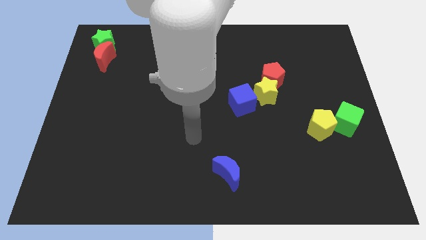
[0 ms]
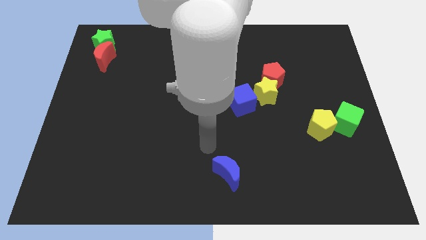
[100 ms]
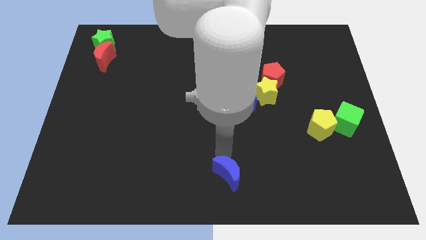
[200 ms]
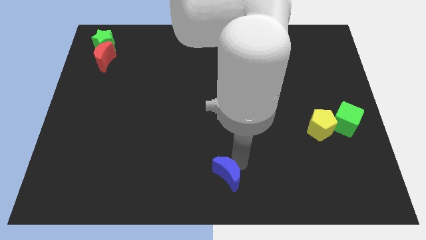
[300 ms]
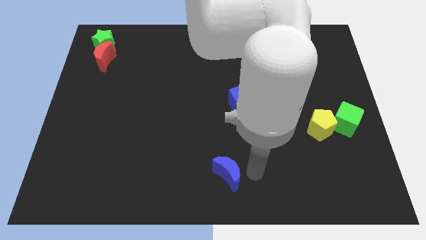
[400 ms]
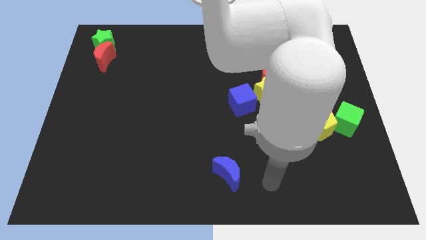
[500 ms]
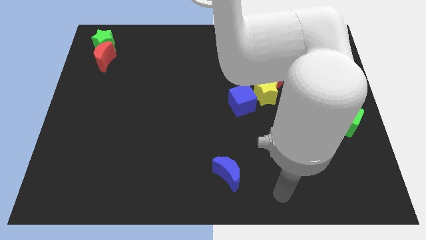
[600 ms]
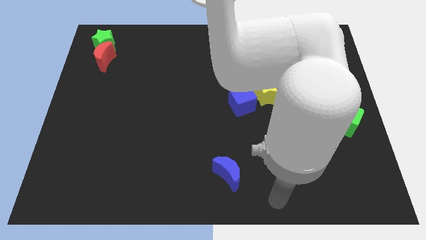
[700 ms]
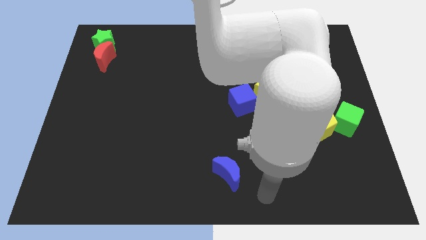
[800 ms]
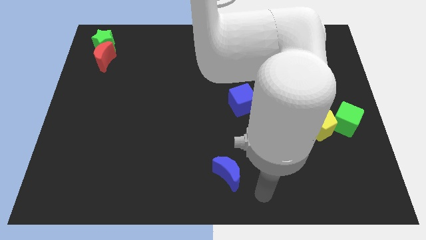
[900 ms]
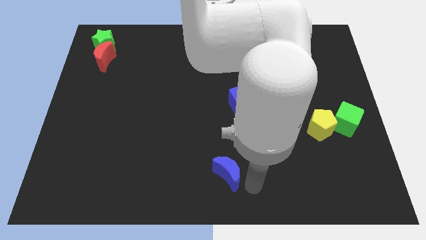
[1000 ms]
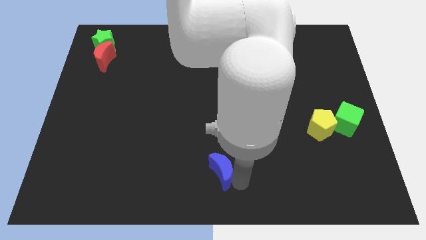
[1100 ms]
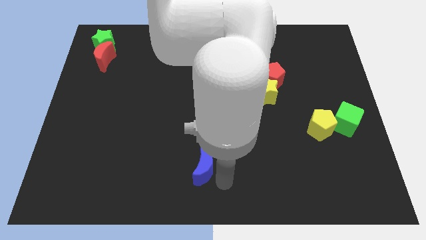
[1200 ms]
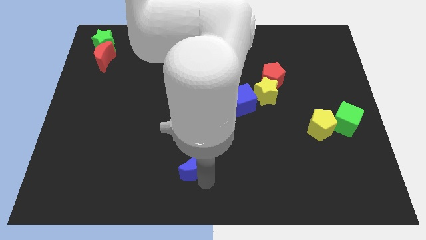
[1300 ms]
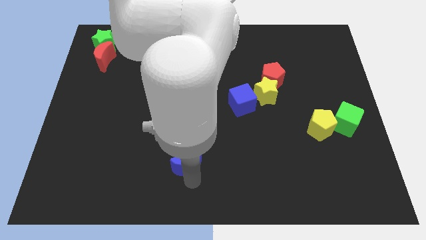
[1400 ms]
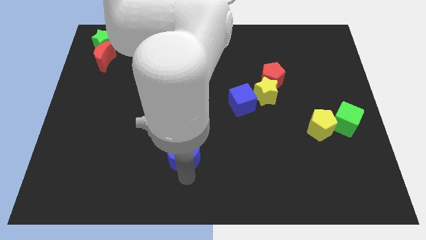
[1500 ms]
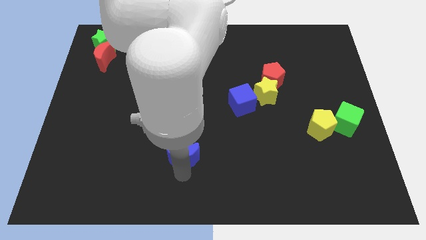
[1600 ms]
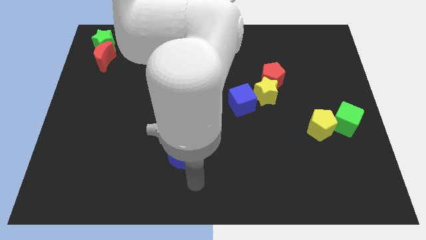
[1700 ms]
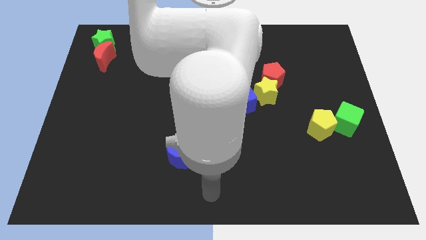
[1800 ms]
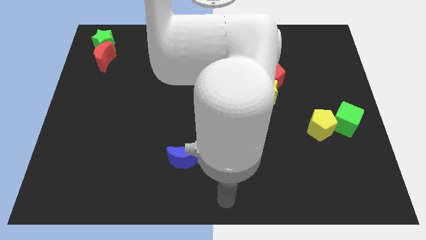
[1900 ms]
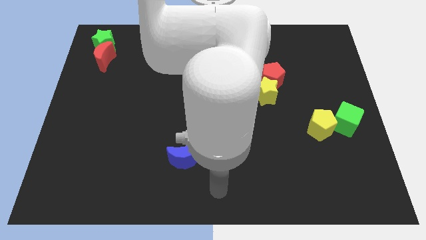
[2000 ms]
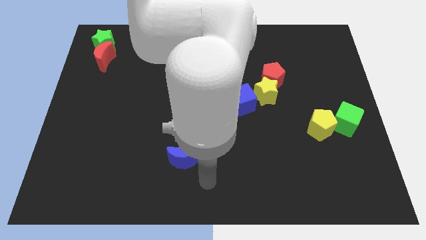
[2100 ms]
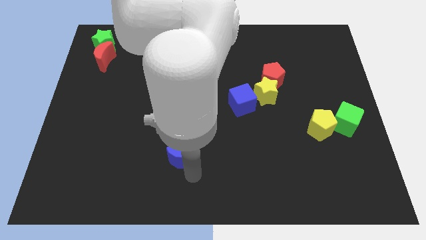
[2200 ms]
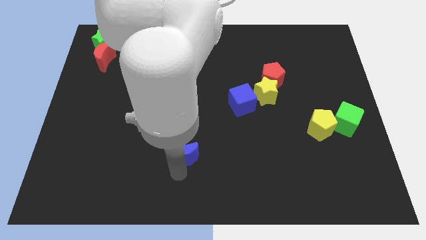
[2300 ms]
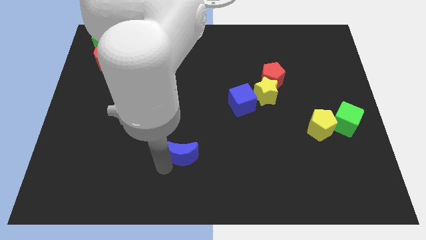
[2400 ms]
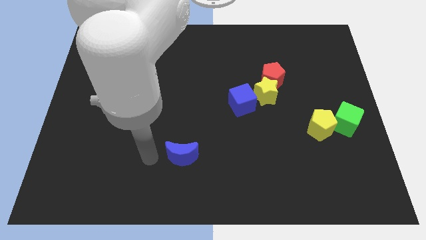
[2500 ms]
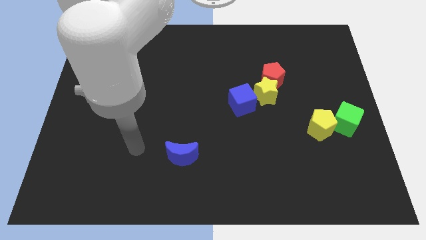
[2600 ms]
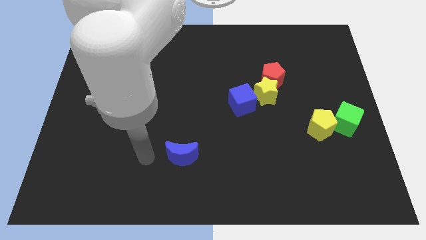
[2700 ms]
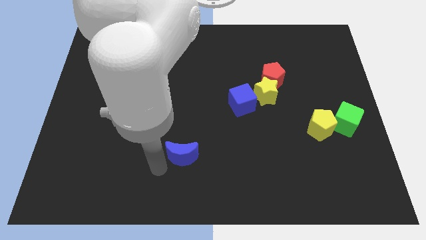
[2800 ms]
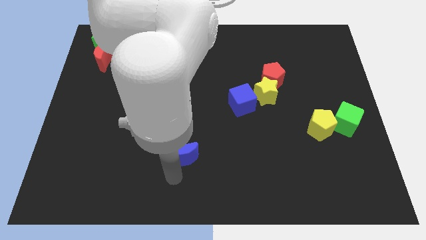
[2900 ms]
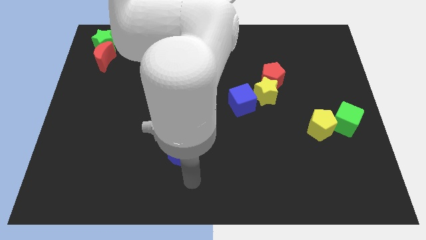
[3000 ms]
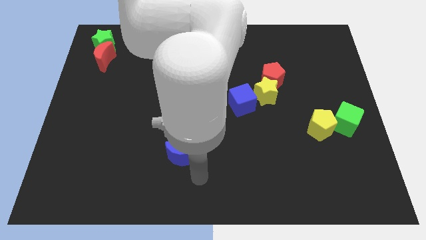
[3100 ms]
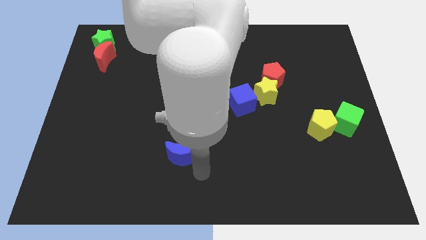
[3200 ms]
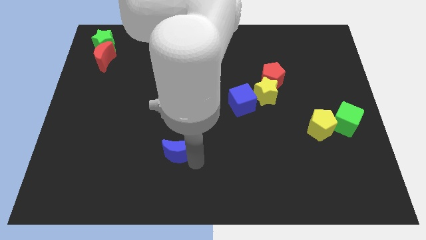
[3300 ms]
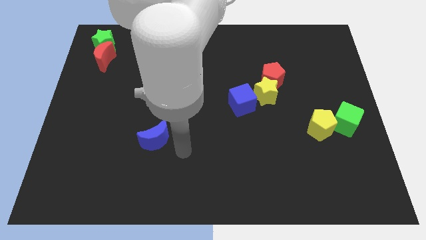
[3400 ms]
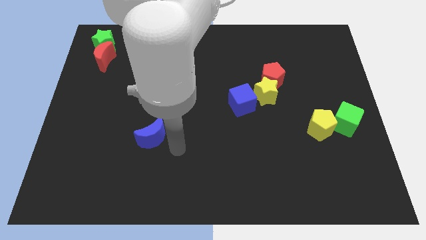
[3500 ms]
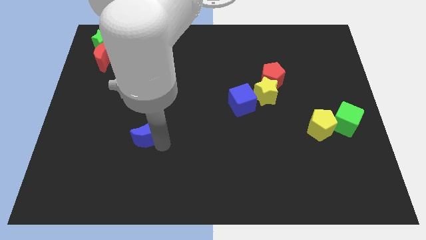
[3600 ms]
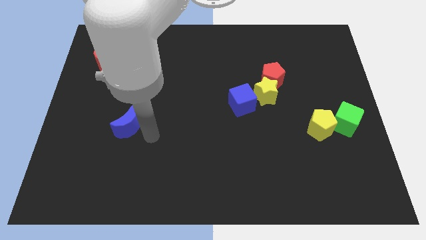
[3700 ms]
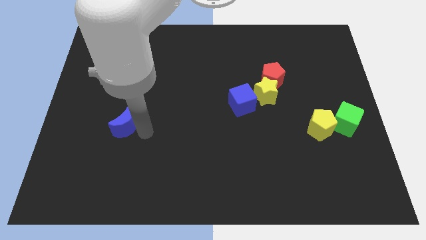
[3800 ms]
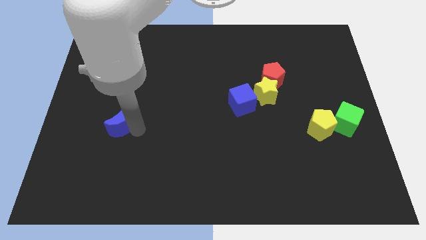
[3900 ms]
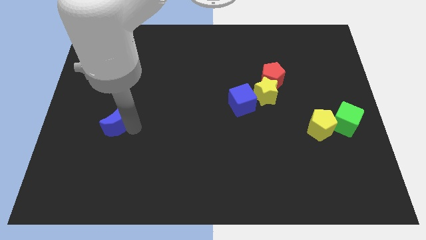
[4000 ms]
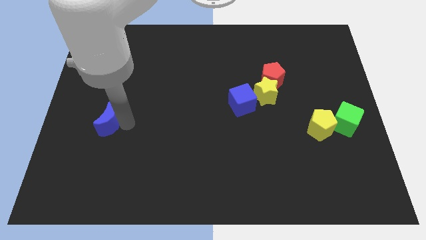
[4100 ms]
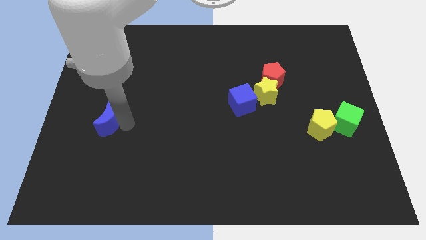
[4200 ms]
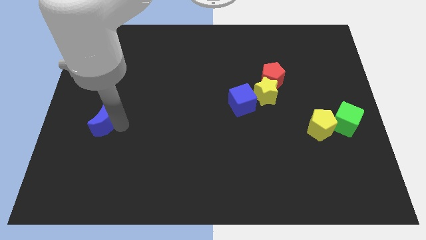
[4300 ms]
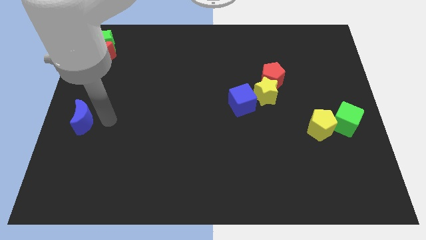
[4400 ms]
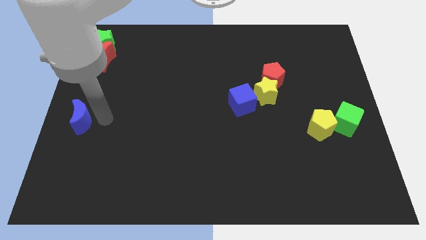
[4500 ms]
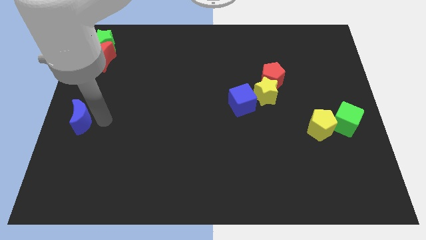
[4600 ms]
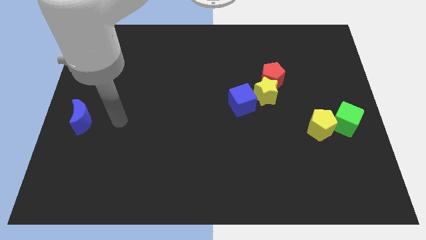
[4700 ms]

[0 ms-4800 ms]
move the blue moon to the center left of the board

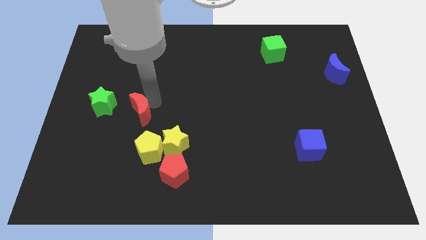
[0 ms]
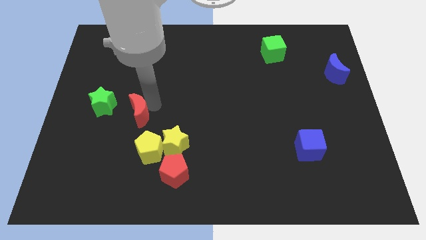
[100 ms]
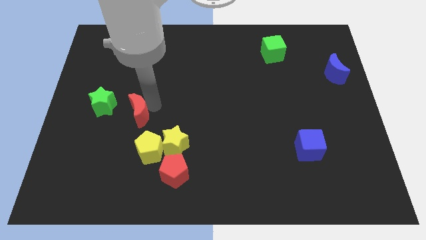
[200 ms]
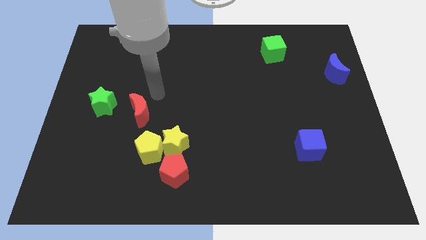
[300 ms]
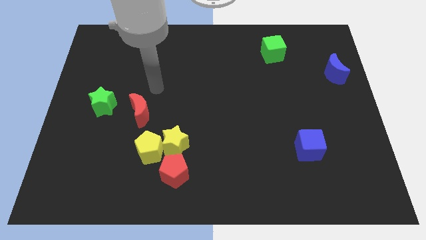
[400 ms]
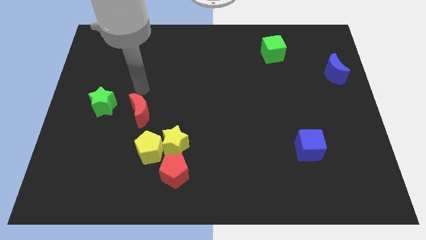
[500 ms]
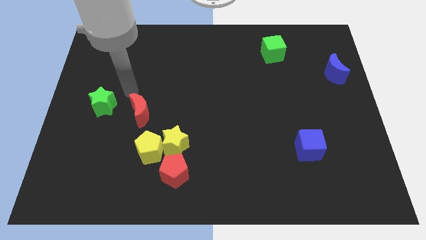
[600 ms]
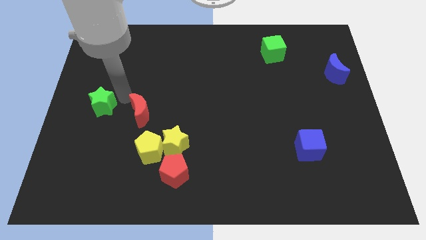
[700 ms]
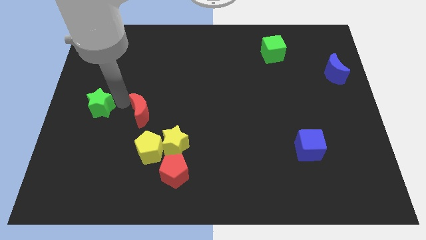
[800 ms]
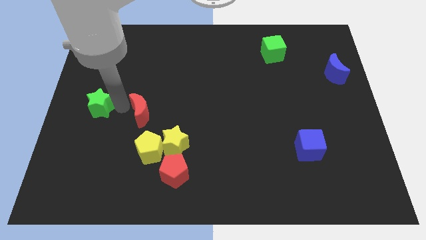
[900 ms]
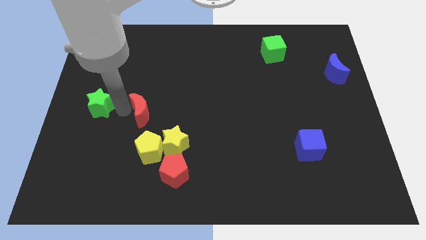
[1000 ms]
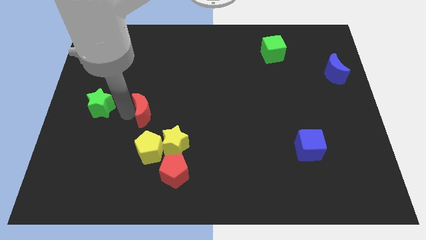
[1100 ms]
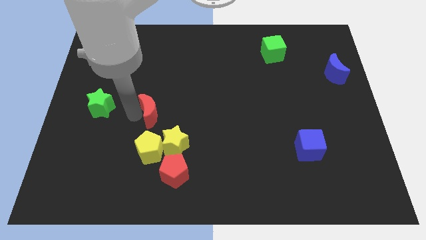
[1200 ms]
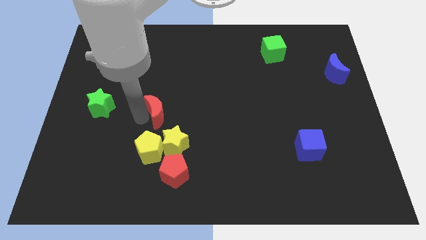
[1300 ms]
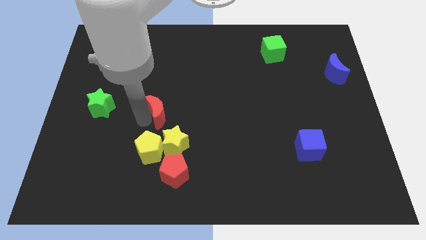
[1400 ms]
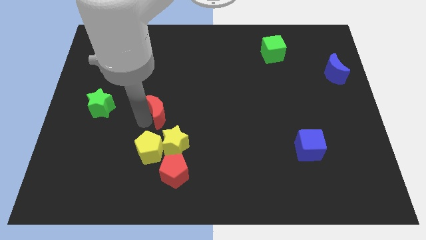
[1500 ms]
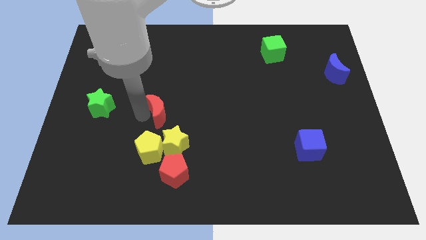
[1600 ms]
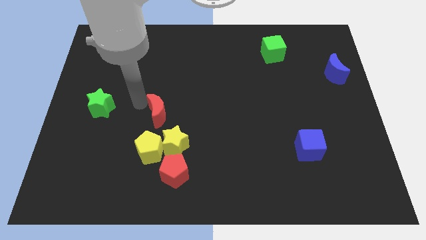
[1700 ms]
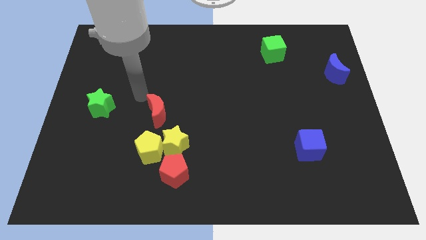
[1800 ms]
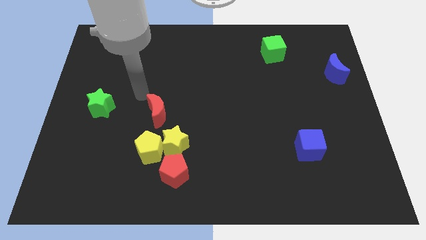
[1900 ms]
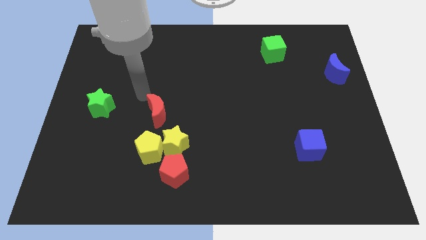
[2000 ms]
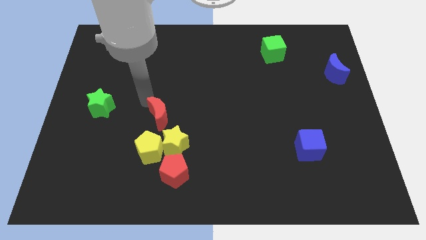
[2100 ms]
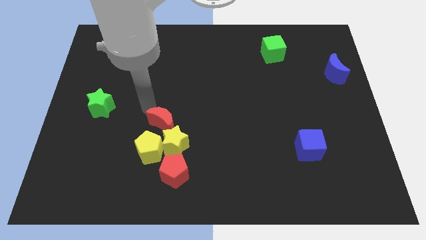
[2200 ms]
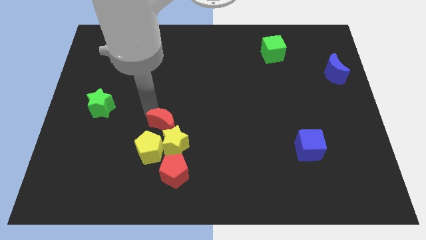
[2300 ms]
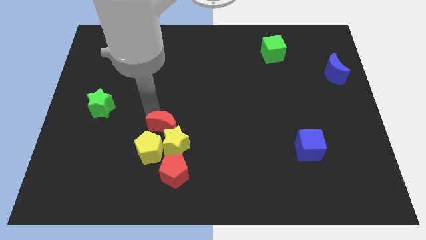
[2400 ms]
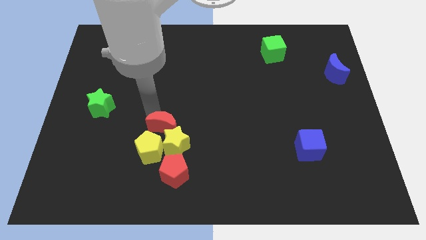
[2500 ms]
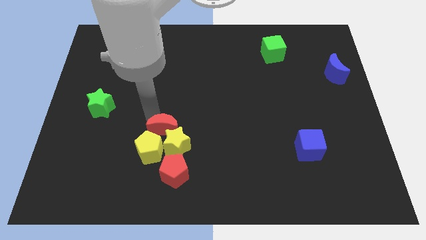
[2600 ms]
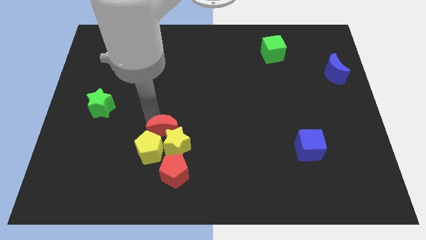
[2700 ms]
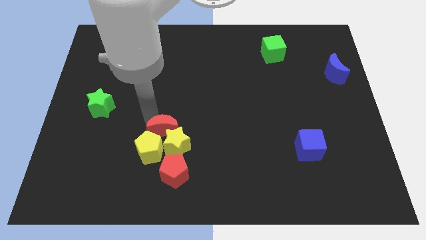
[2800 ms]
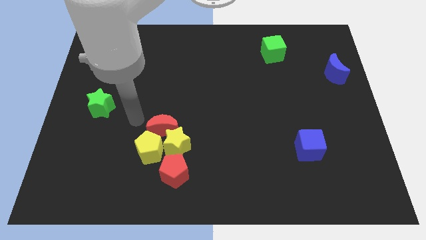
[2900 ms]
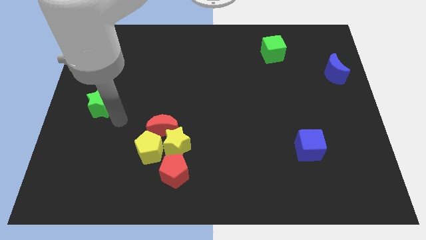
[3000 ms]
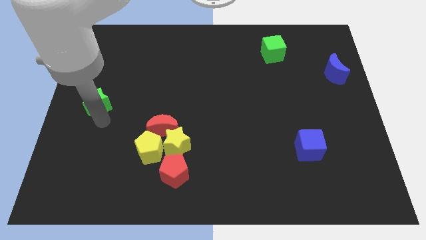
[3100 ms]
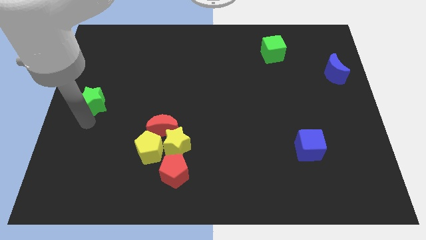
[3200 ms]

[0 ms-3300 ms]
put the red moon at the top of yellow blocks

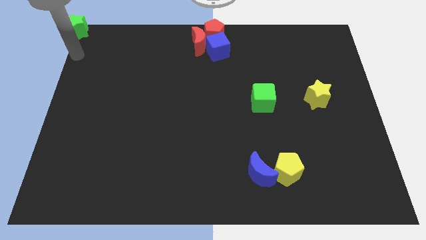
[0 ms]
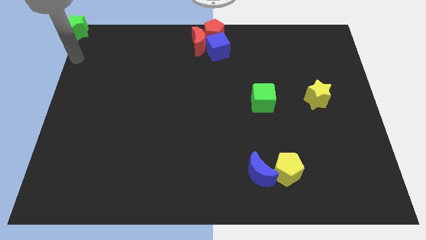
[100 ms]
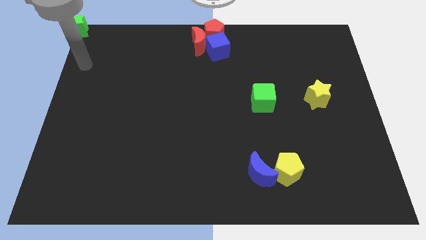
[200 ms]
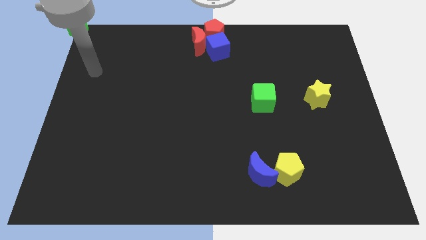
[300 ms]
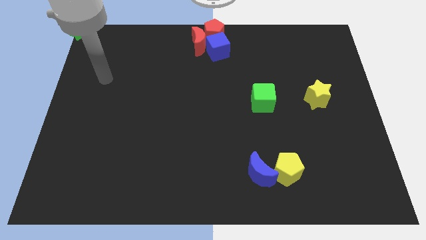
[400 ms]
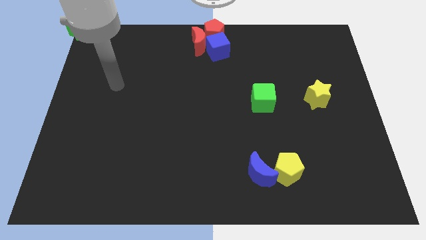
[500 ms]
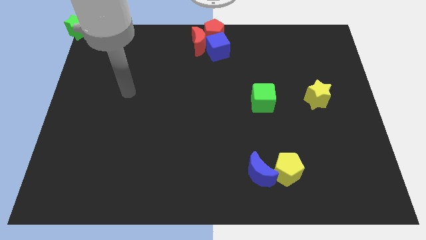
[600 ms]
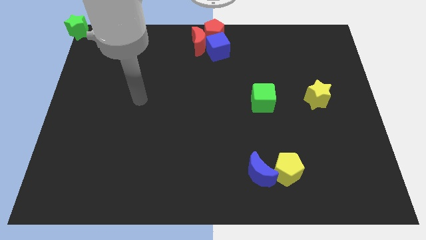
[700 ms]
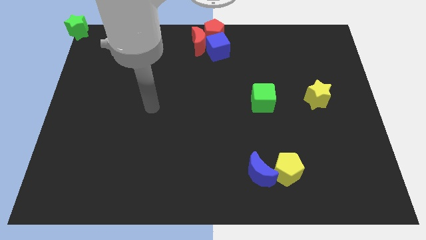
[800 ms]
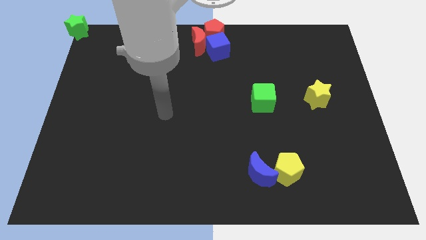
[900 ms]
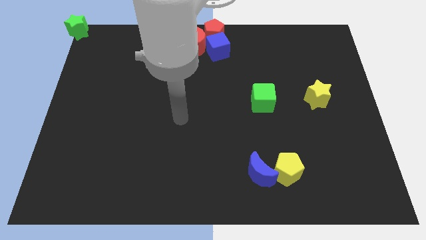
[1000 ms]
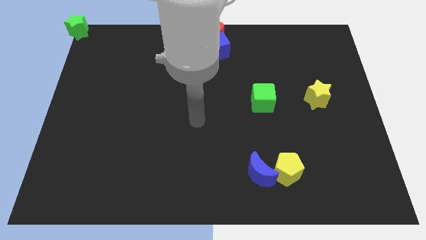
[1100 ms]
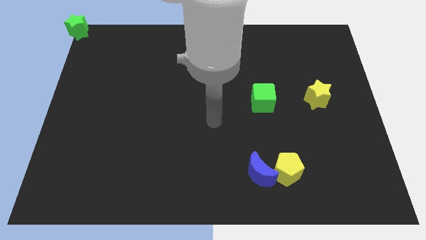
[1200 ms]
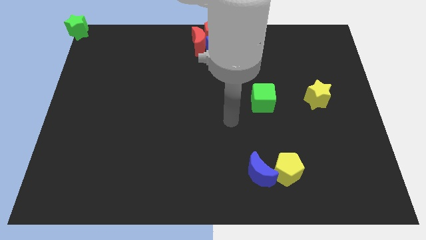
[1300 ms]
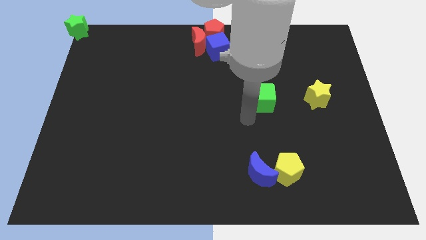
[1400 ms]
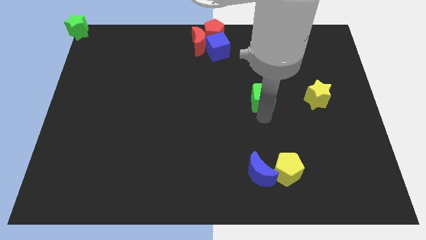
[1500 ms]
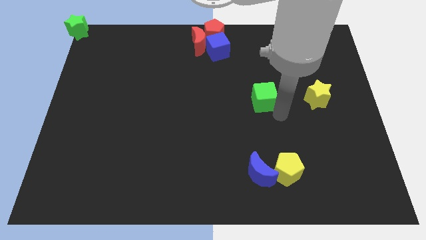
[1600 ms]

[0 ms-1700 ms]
move your hand away from the green star
